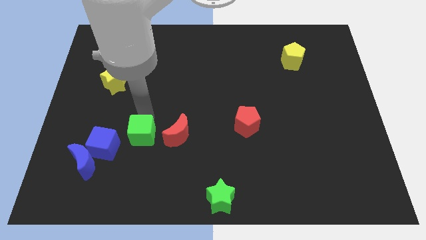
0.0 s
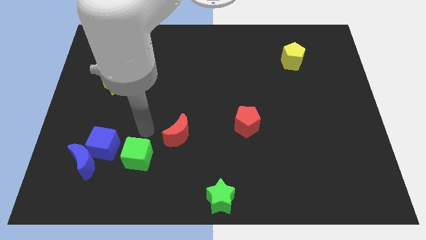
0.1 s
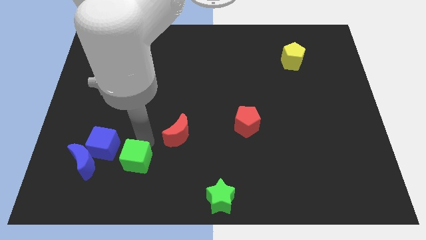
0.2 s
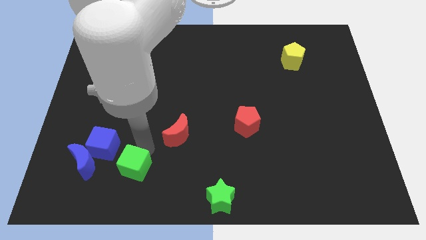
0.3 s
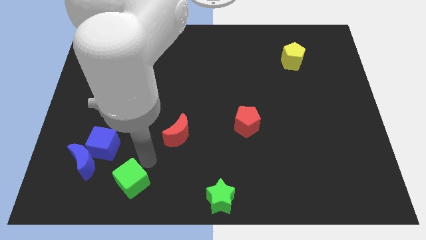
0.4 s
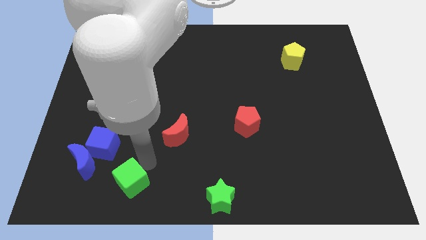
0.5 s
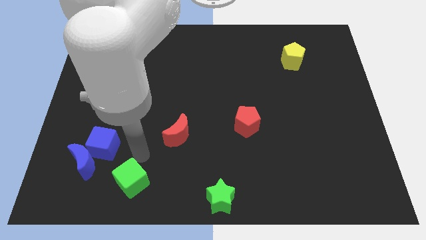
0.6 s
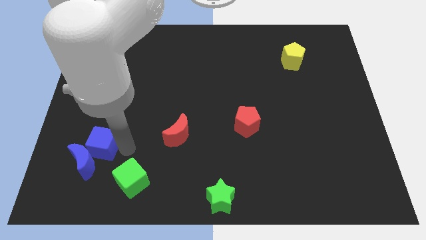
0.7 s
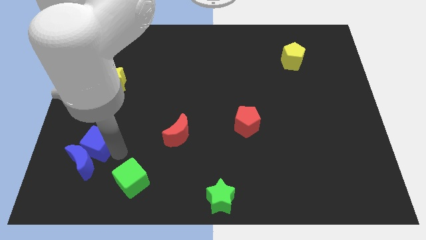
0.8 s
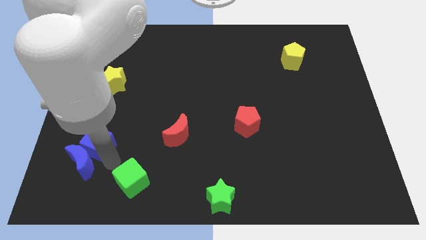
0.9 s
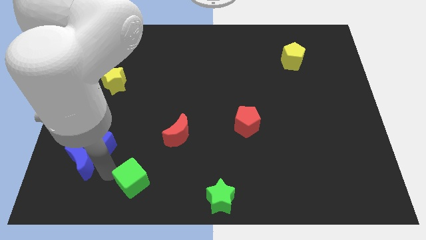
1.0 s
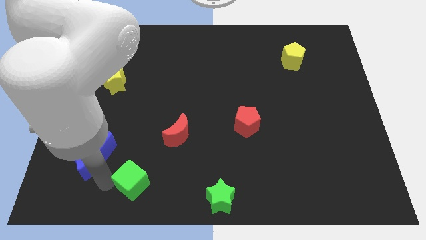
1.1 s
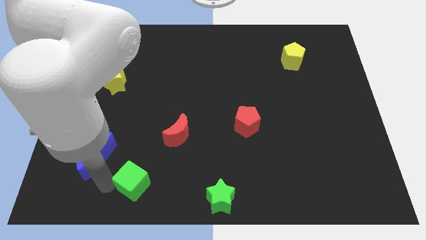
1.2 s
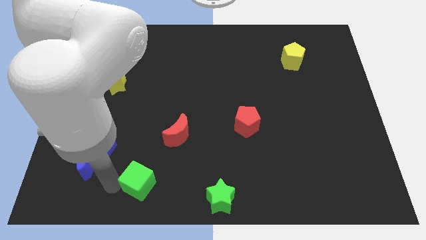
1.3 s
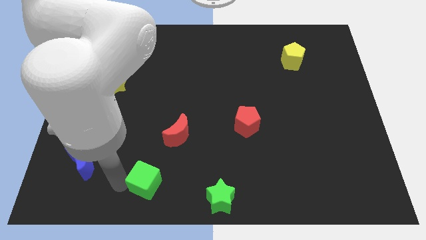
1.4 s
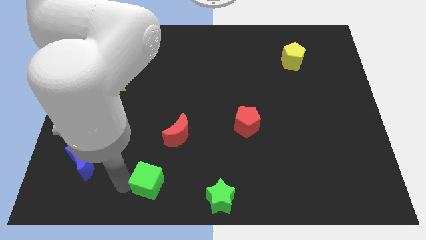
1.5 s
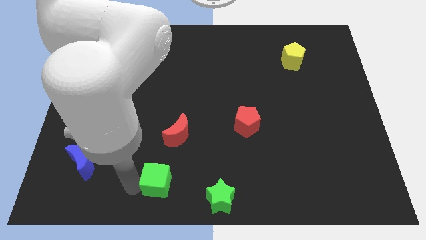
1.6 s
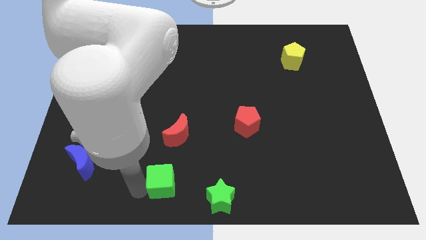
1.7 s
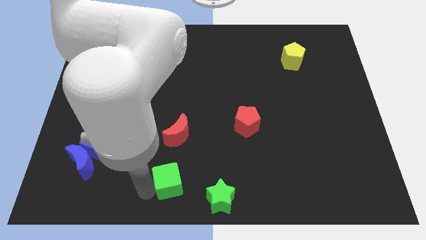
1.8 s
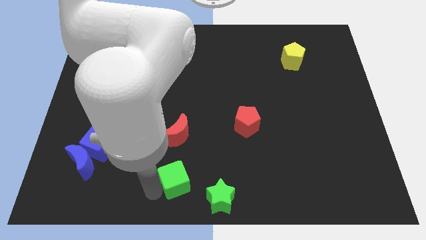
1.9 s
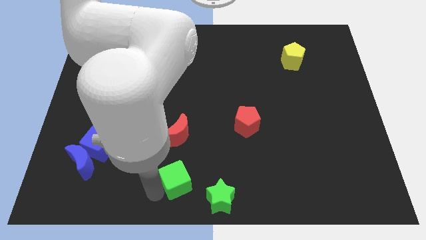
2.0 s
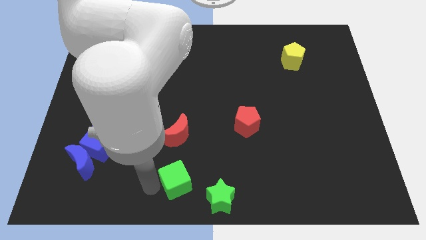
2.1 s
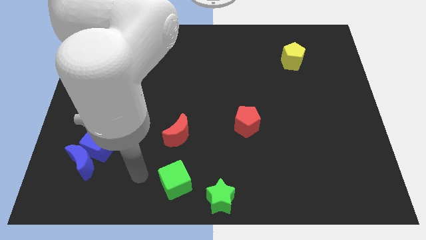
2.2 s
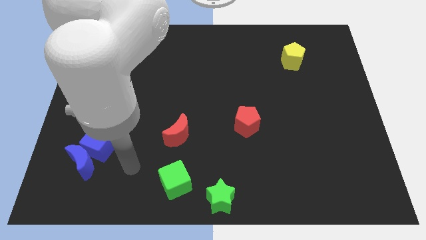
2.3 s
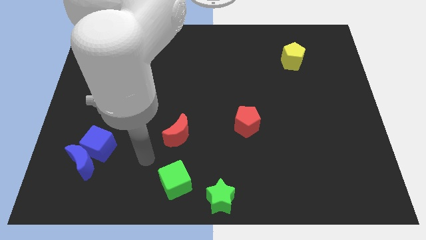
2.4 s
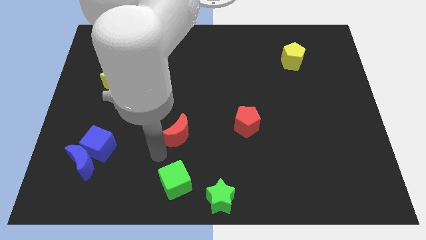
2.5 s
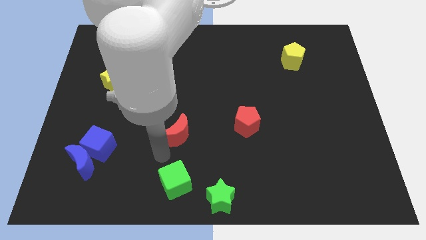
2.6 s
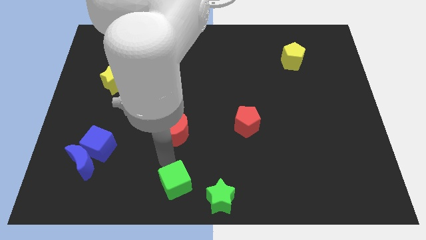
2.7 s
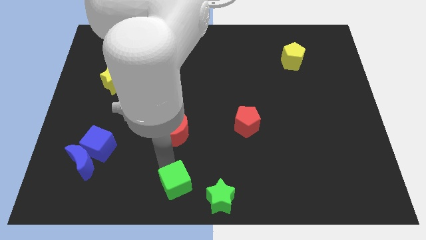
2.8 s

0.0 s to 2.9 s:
place the green cube diagonally to red pentagon

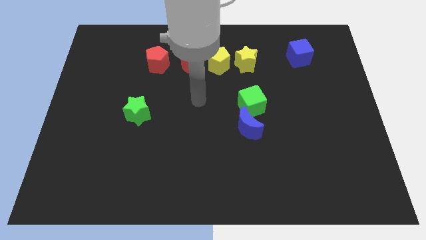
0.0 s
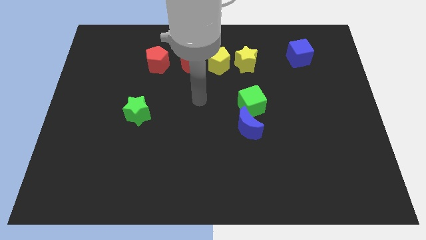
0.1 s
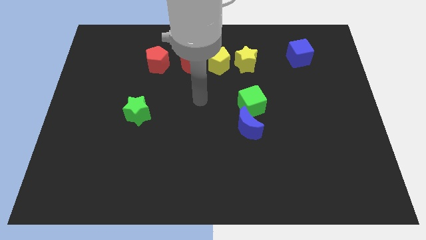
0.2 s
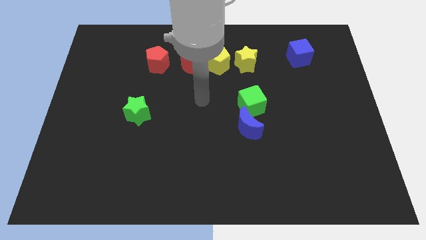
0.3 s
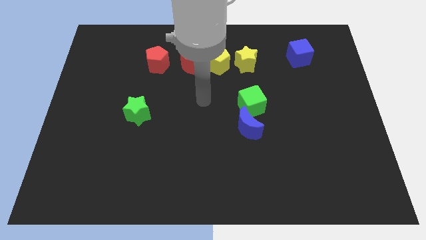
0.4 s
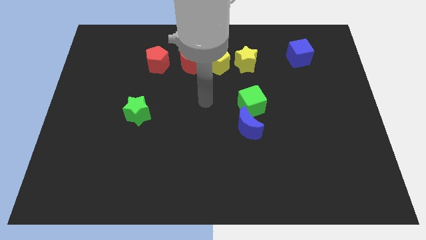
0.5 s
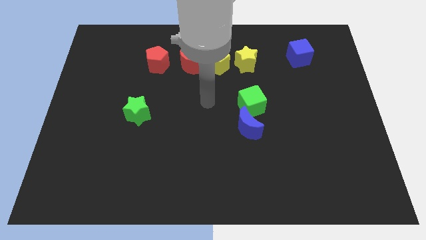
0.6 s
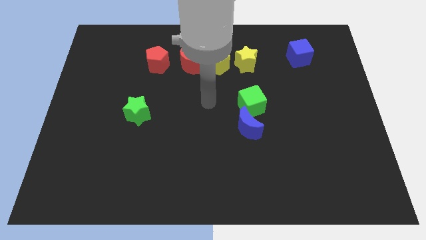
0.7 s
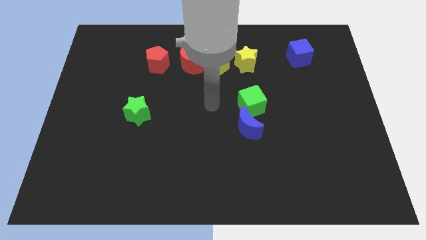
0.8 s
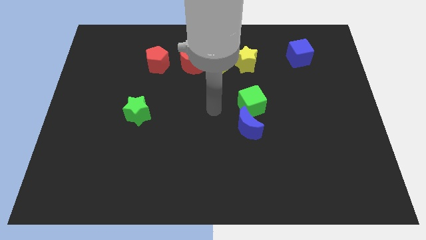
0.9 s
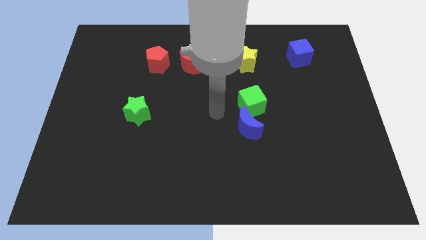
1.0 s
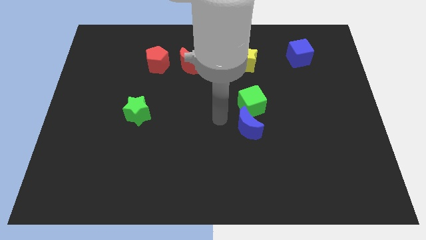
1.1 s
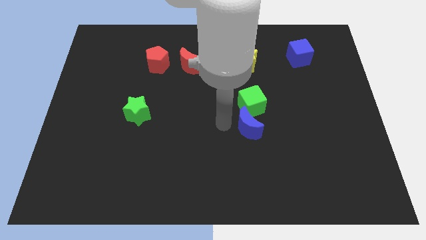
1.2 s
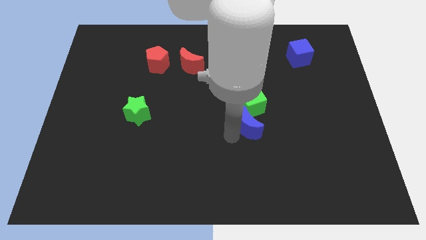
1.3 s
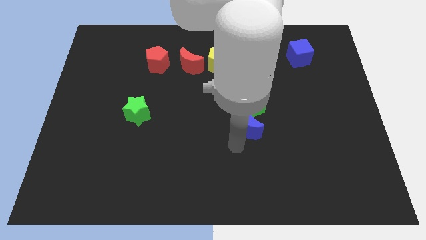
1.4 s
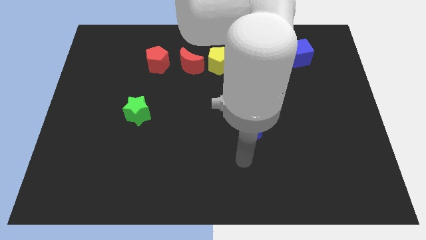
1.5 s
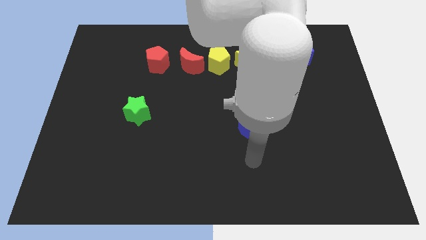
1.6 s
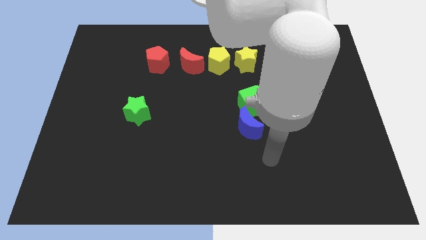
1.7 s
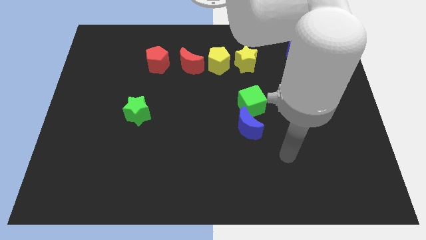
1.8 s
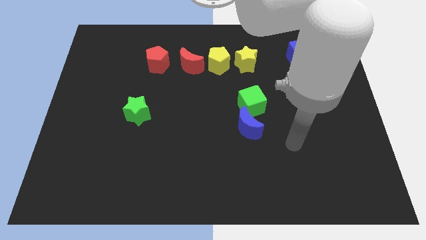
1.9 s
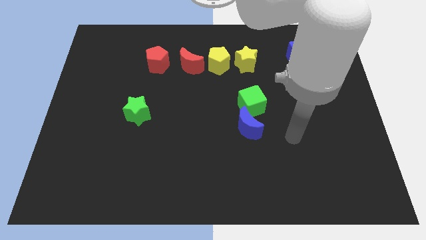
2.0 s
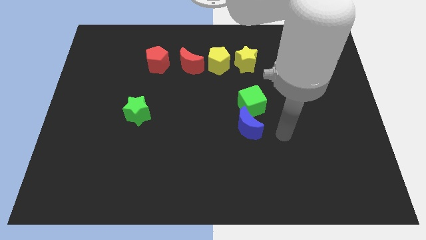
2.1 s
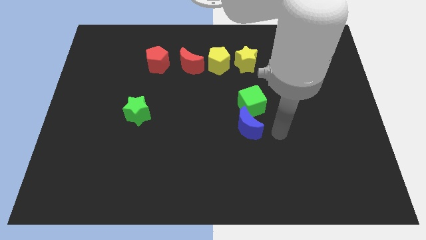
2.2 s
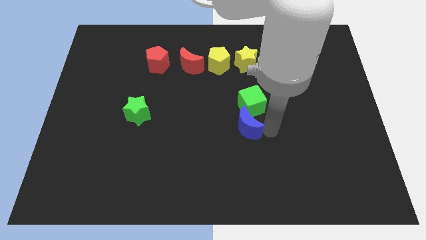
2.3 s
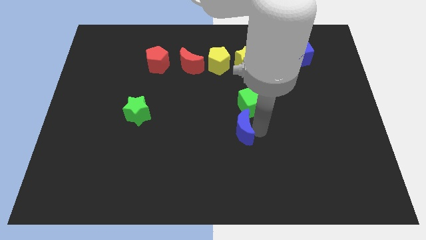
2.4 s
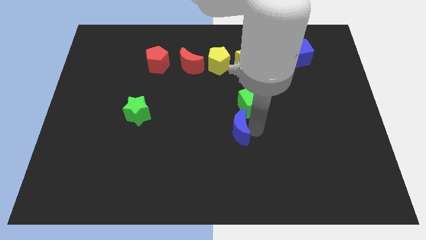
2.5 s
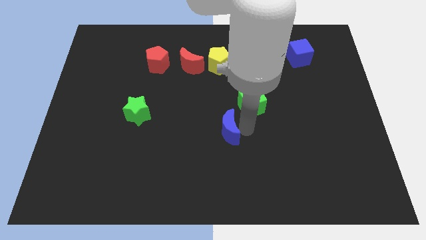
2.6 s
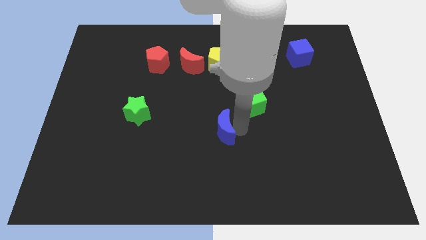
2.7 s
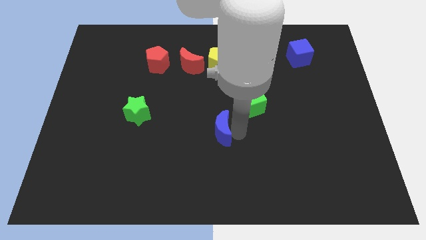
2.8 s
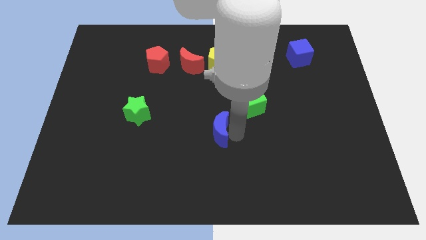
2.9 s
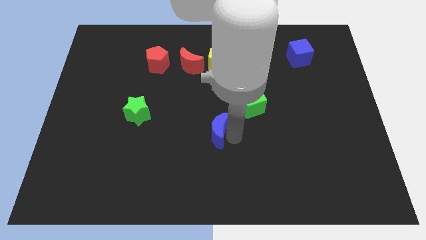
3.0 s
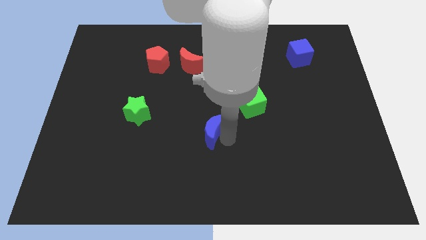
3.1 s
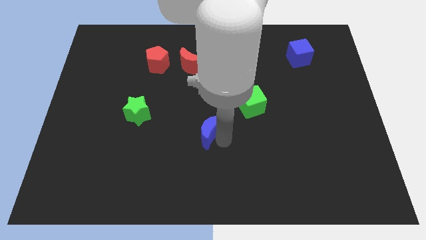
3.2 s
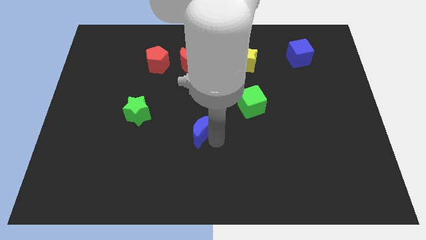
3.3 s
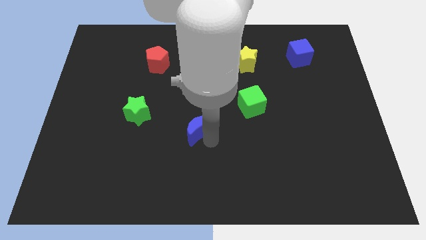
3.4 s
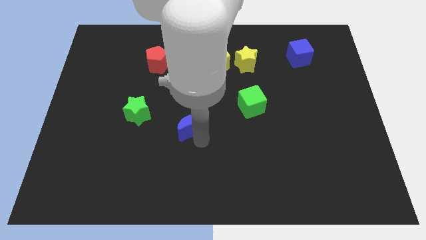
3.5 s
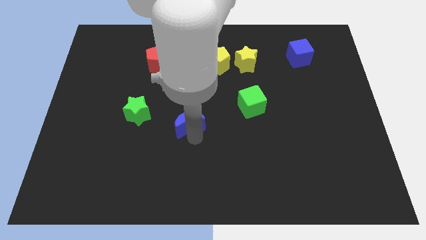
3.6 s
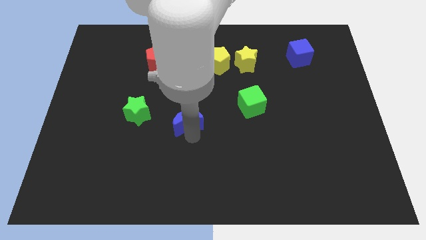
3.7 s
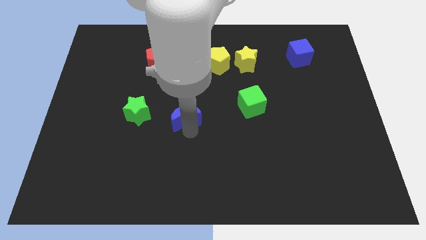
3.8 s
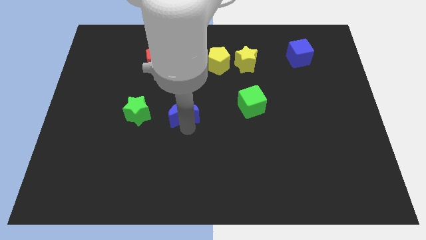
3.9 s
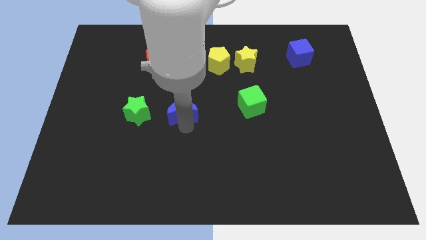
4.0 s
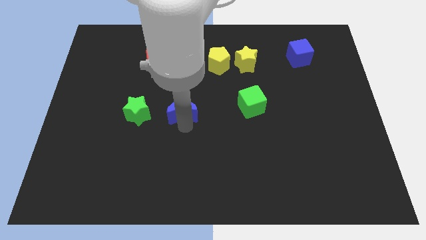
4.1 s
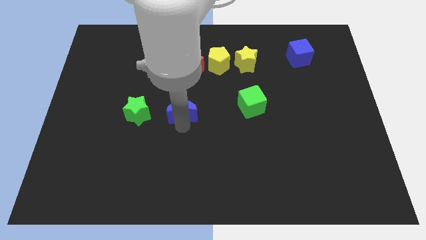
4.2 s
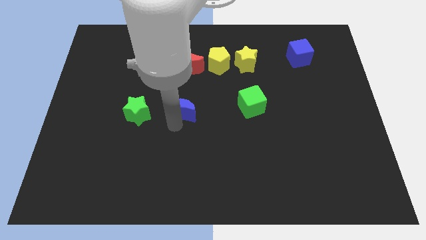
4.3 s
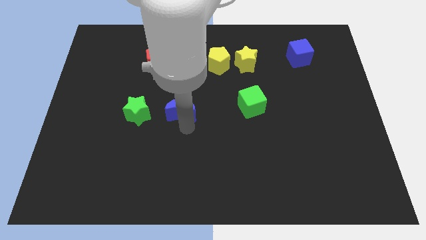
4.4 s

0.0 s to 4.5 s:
move the blue moon right of the green star

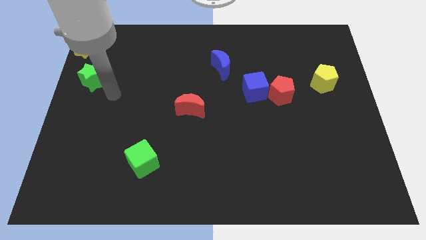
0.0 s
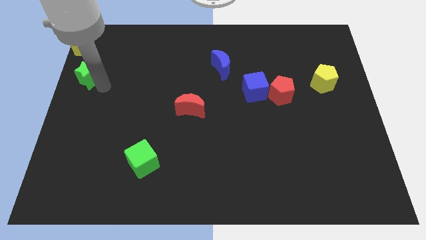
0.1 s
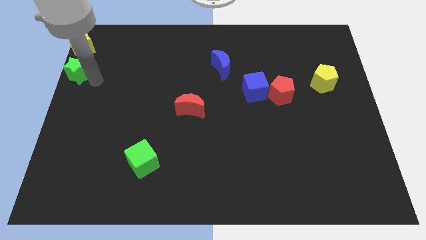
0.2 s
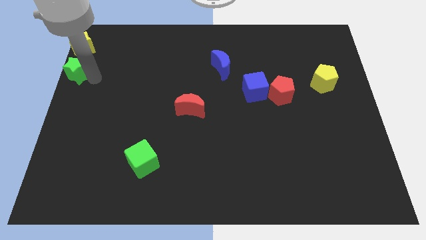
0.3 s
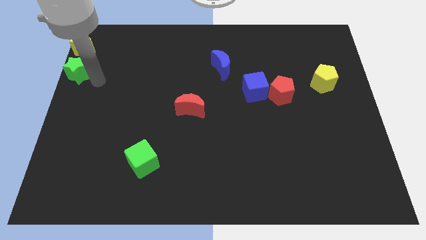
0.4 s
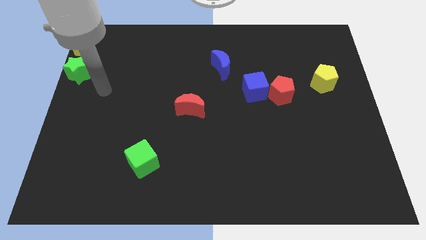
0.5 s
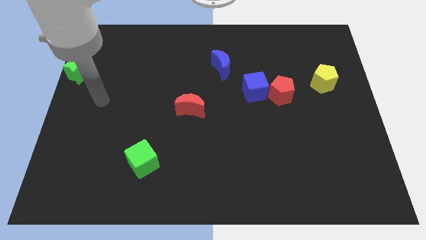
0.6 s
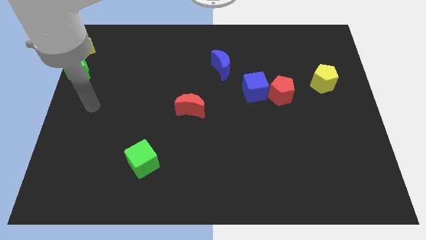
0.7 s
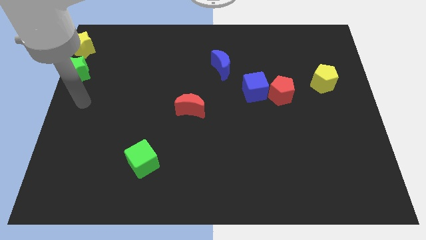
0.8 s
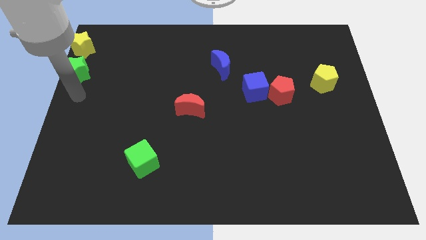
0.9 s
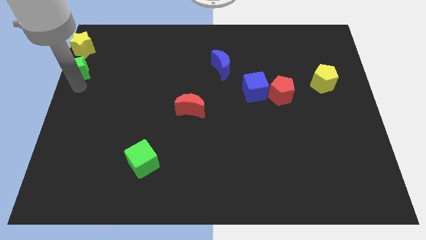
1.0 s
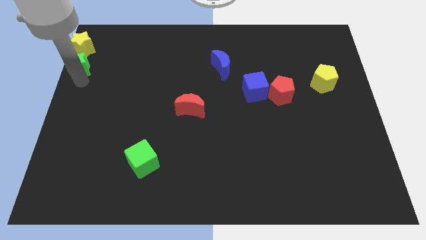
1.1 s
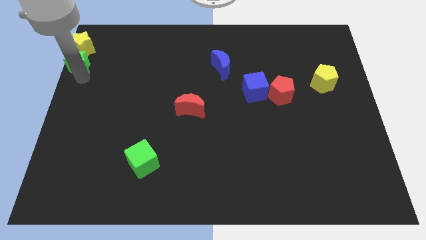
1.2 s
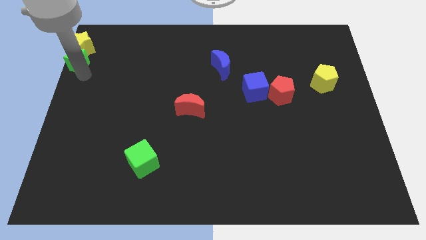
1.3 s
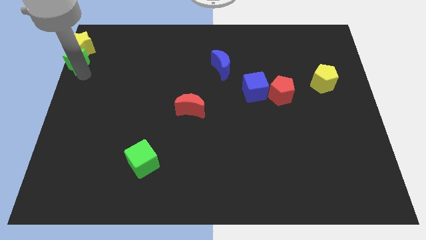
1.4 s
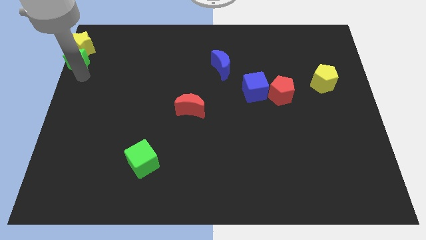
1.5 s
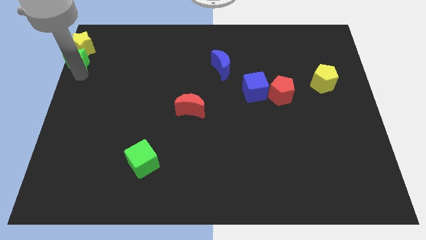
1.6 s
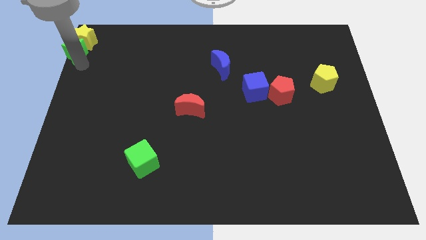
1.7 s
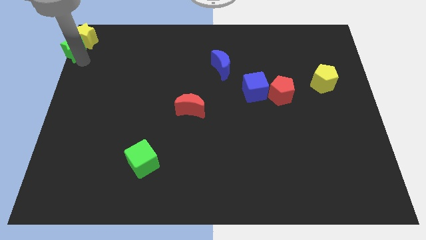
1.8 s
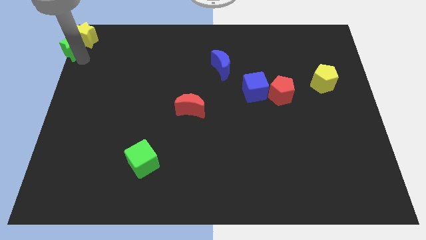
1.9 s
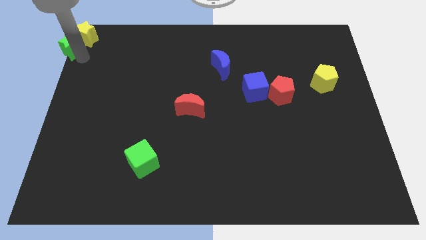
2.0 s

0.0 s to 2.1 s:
push the green star and yellow star towards the top left of the board
